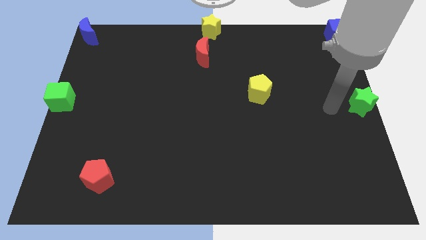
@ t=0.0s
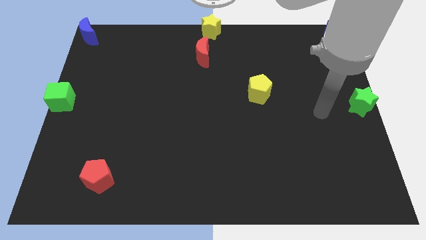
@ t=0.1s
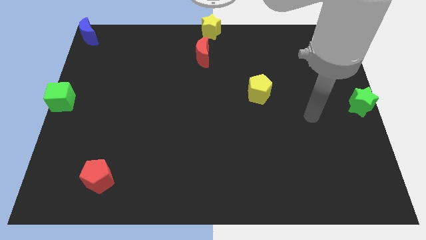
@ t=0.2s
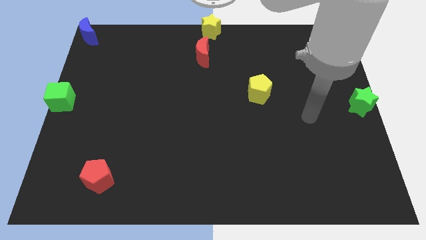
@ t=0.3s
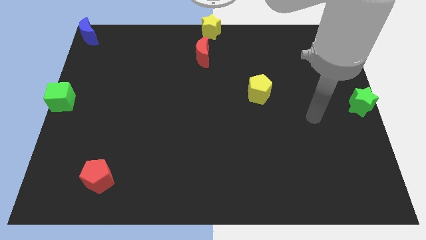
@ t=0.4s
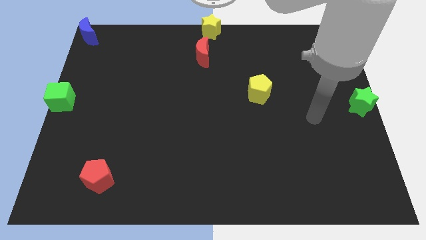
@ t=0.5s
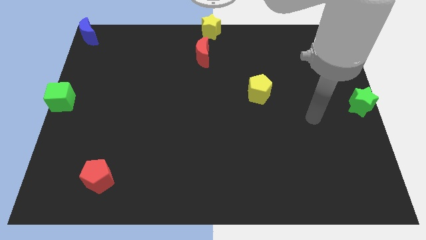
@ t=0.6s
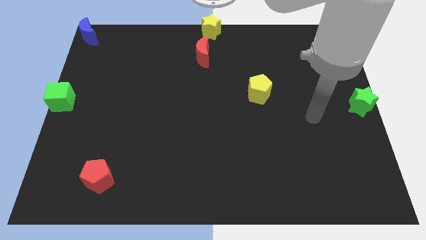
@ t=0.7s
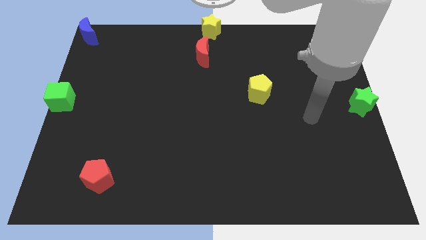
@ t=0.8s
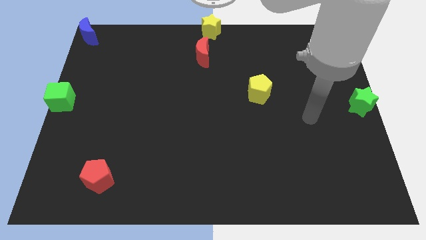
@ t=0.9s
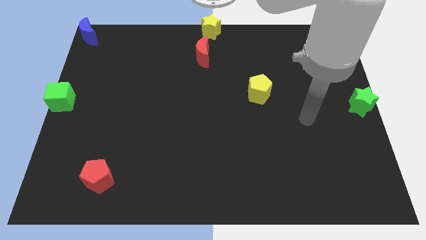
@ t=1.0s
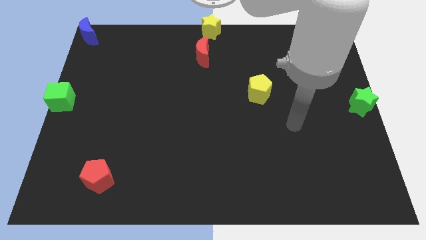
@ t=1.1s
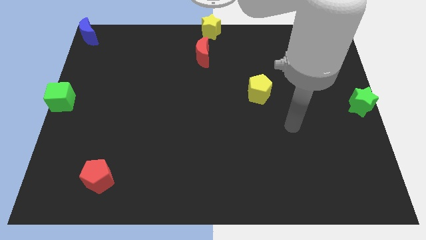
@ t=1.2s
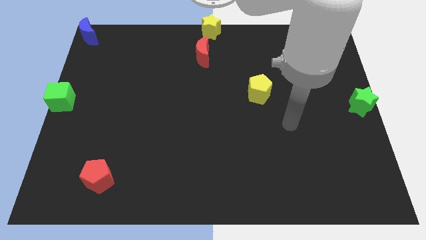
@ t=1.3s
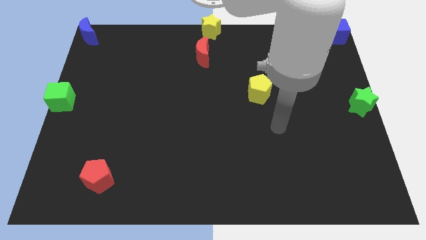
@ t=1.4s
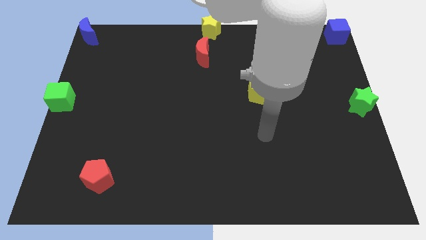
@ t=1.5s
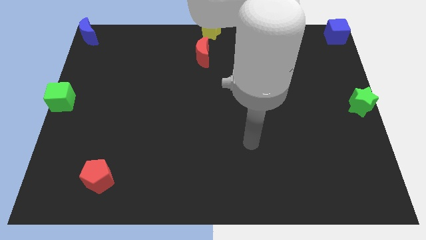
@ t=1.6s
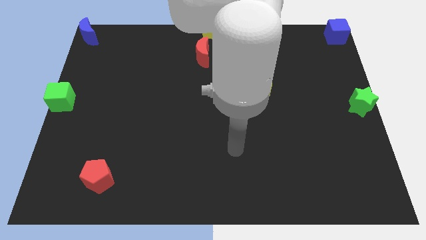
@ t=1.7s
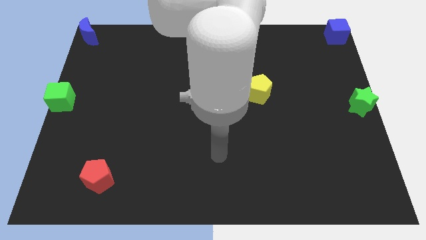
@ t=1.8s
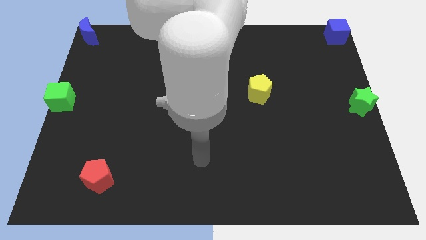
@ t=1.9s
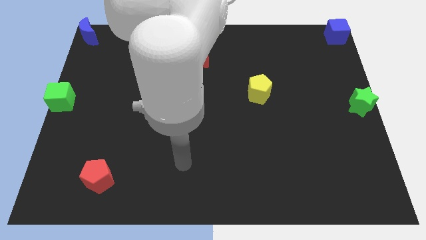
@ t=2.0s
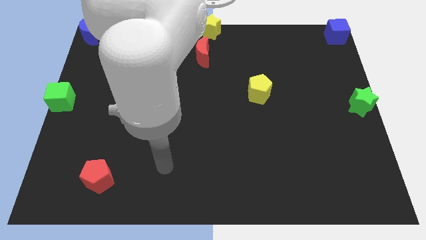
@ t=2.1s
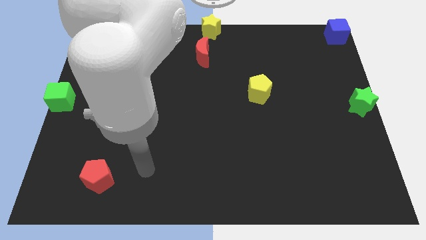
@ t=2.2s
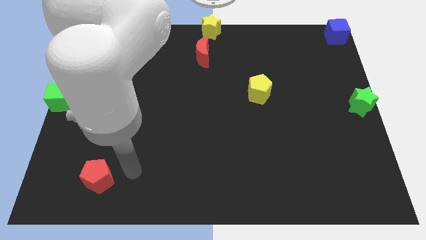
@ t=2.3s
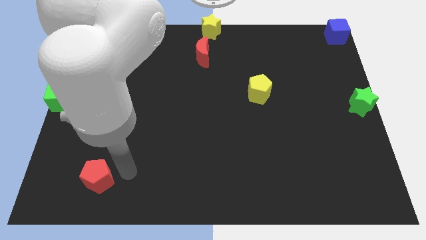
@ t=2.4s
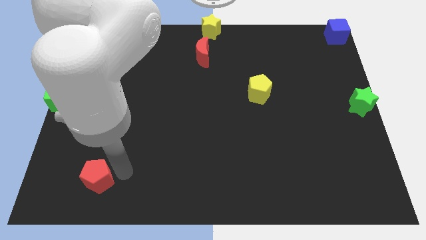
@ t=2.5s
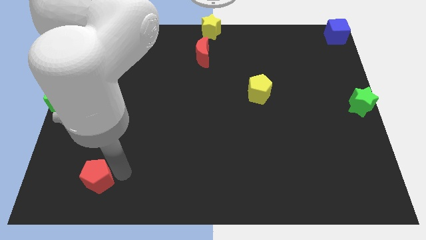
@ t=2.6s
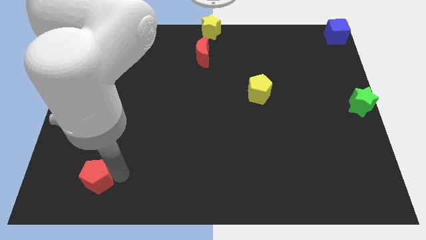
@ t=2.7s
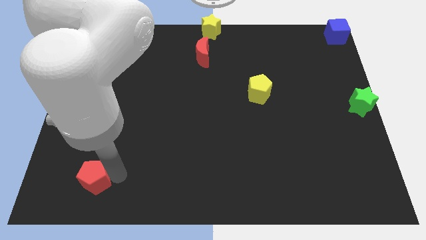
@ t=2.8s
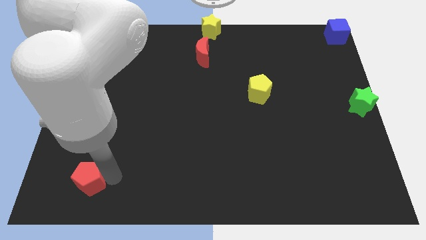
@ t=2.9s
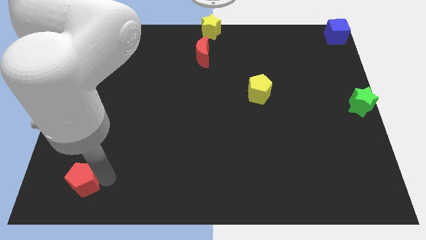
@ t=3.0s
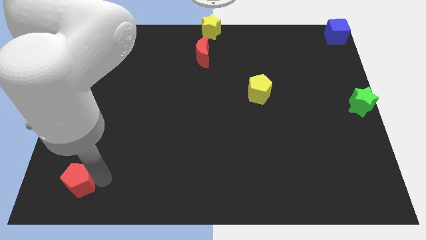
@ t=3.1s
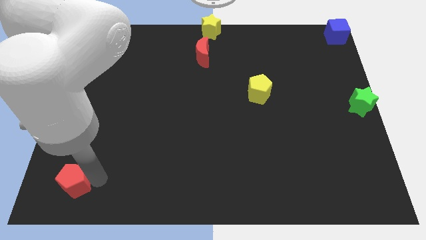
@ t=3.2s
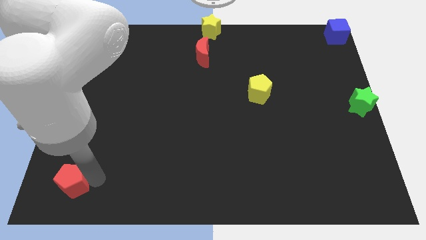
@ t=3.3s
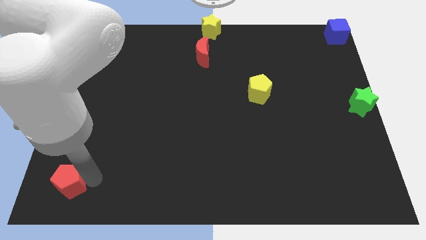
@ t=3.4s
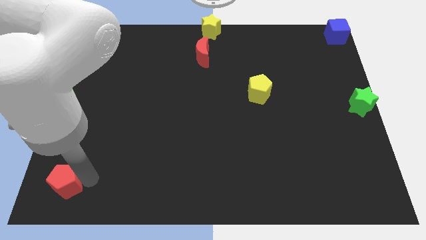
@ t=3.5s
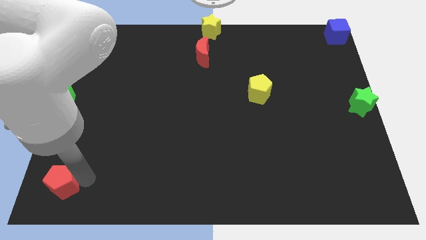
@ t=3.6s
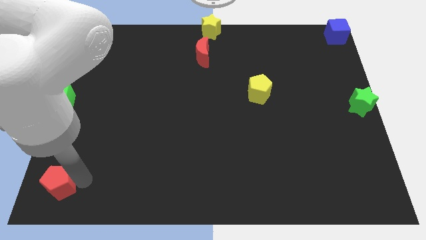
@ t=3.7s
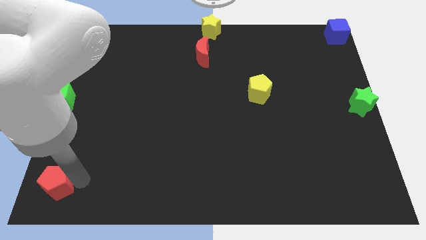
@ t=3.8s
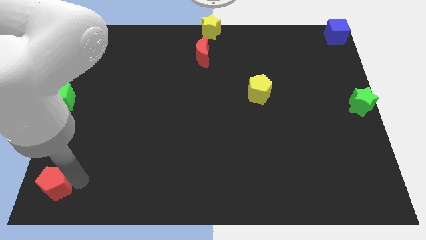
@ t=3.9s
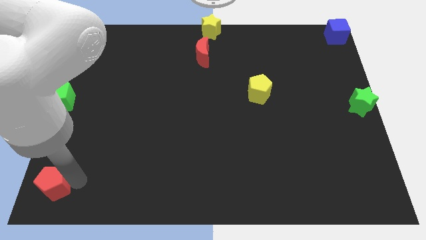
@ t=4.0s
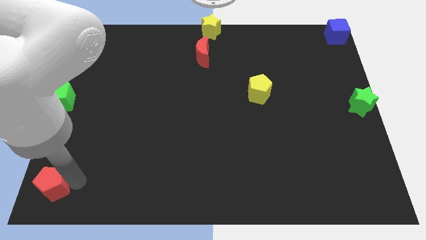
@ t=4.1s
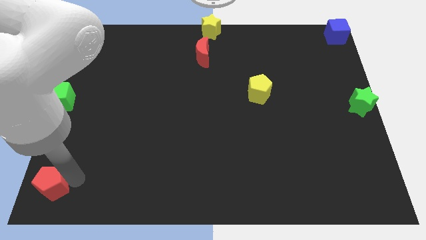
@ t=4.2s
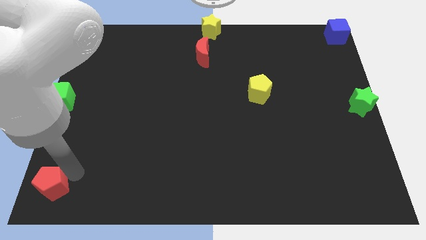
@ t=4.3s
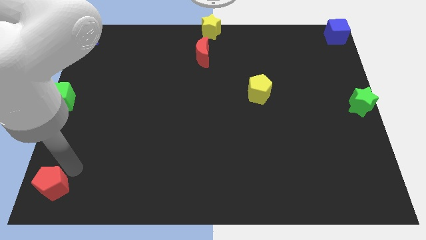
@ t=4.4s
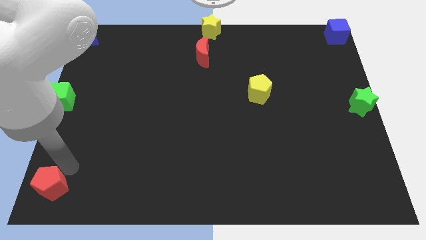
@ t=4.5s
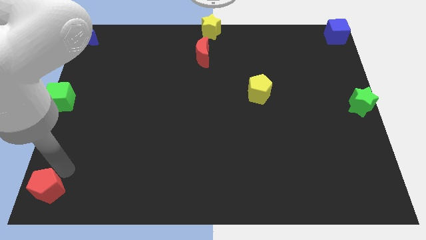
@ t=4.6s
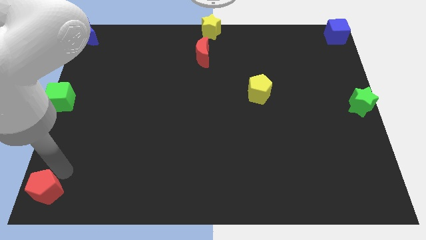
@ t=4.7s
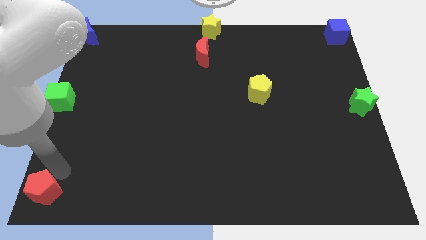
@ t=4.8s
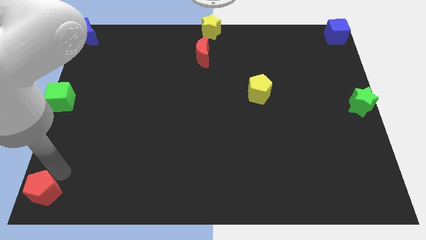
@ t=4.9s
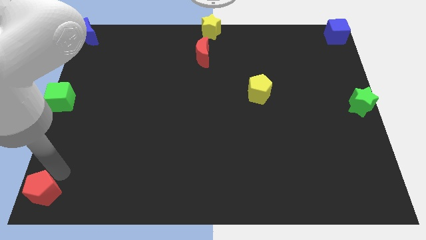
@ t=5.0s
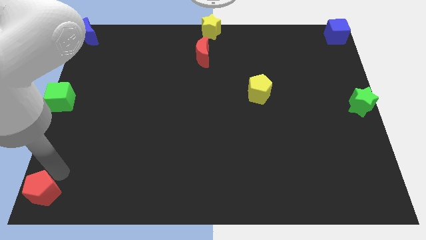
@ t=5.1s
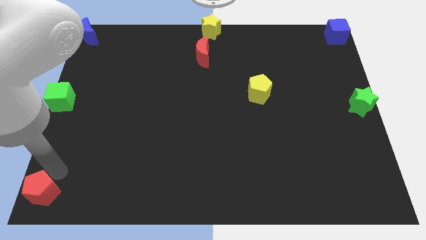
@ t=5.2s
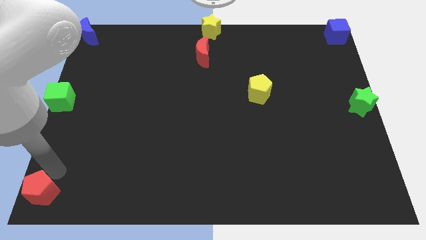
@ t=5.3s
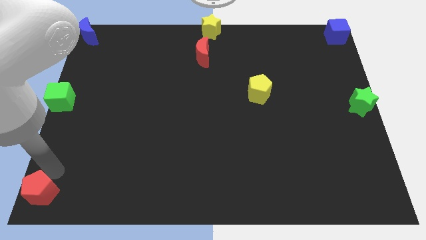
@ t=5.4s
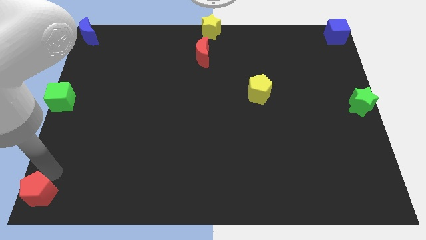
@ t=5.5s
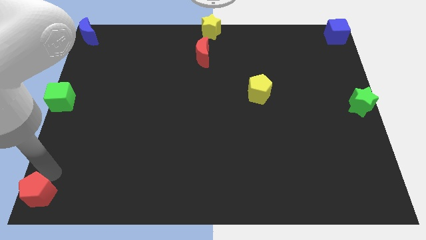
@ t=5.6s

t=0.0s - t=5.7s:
put the red pentagon at the bottom left side corner of the board

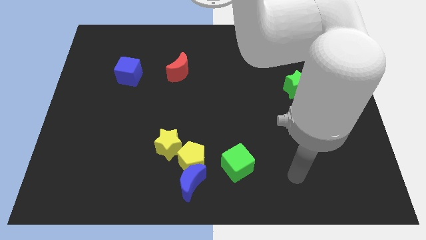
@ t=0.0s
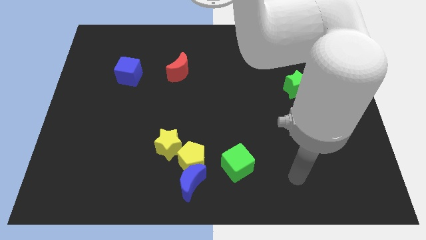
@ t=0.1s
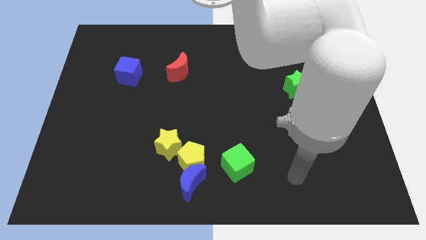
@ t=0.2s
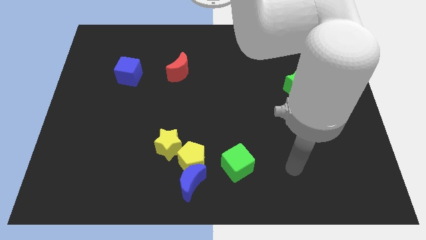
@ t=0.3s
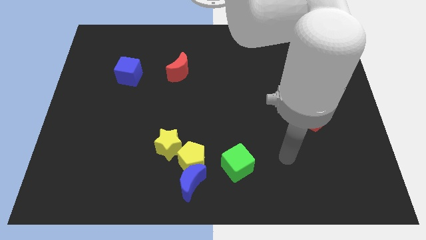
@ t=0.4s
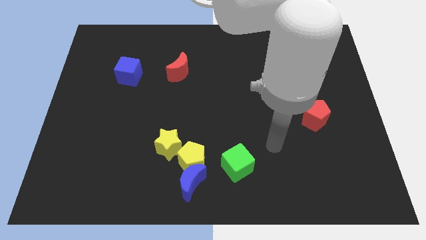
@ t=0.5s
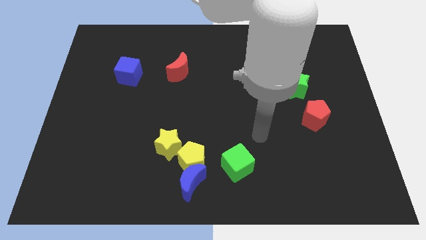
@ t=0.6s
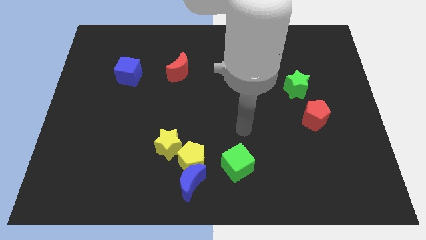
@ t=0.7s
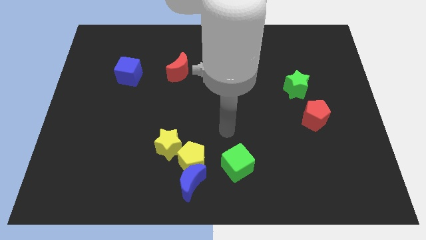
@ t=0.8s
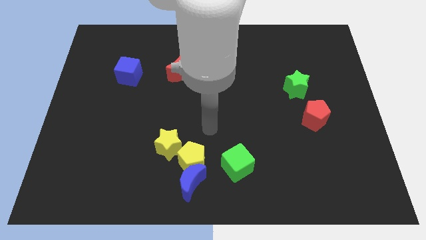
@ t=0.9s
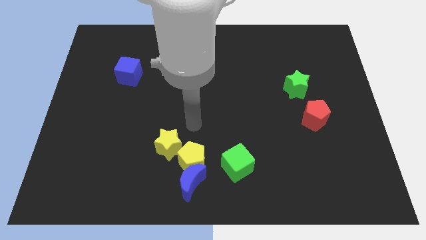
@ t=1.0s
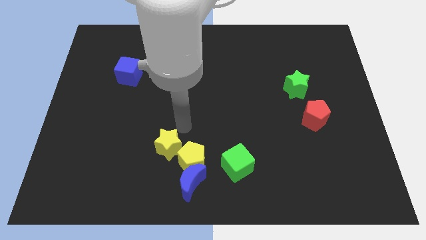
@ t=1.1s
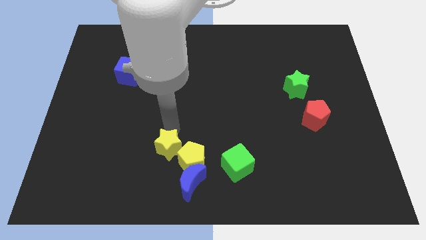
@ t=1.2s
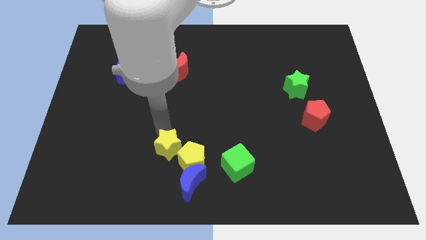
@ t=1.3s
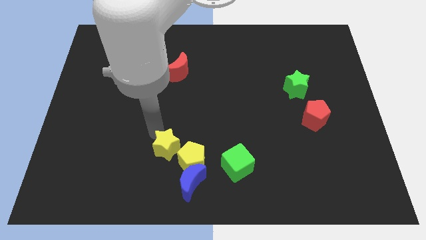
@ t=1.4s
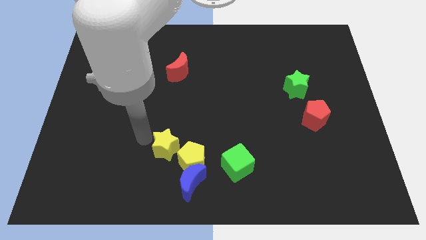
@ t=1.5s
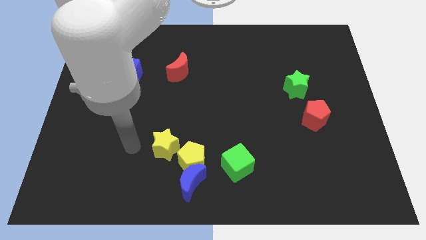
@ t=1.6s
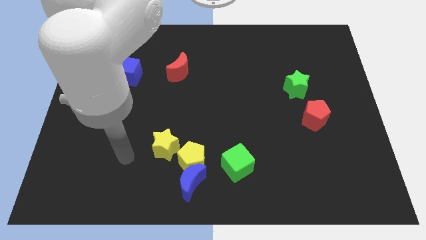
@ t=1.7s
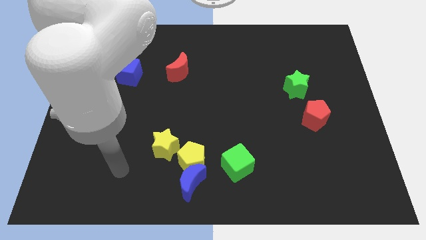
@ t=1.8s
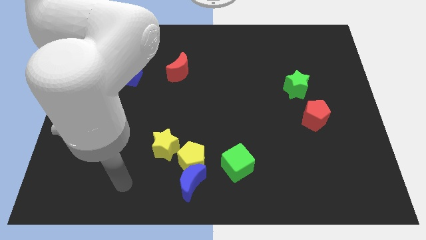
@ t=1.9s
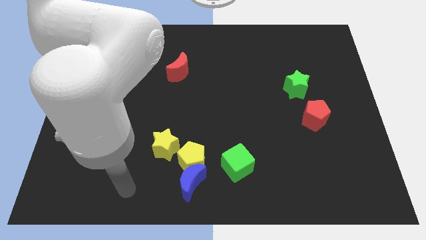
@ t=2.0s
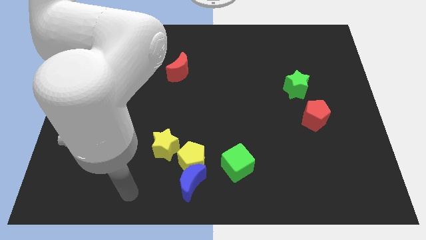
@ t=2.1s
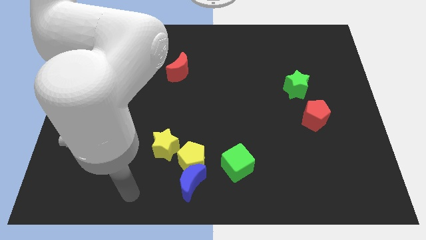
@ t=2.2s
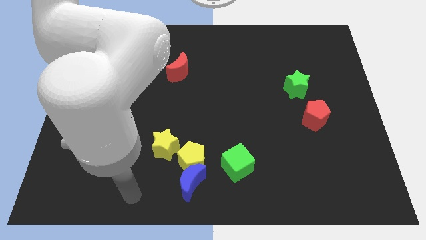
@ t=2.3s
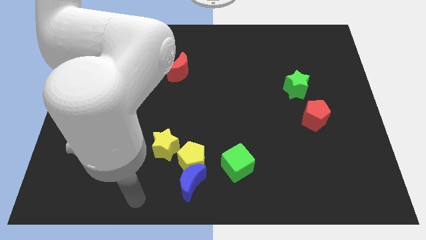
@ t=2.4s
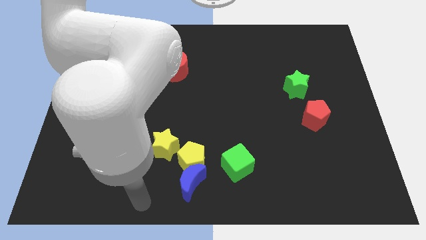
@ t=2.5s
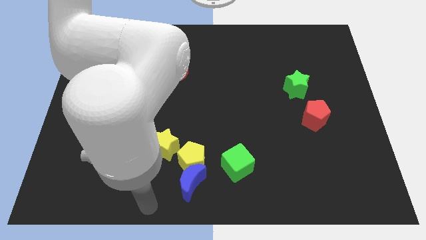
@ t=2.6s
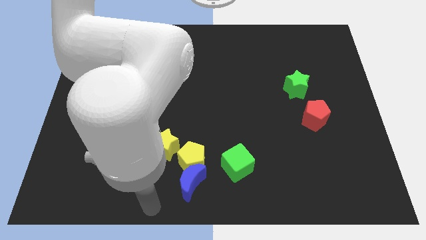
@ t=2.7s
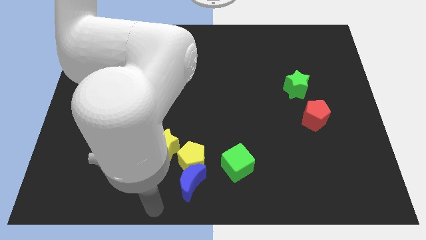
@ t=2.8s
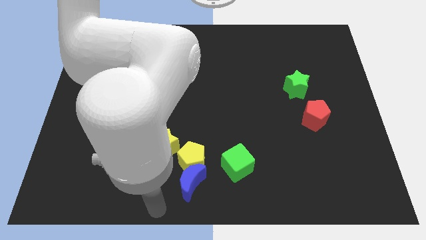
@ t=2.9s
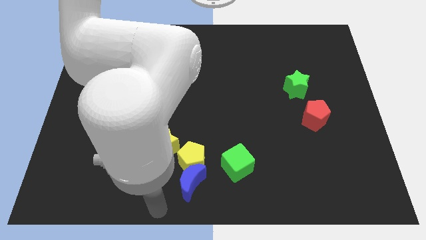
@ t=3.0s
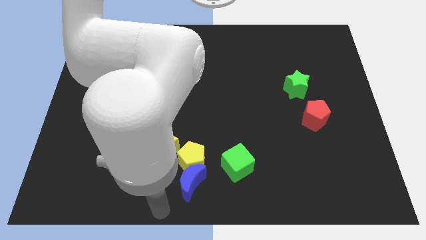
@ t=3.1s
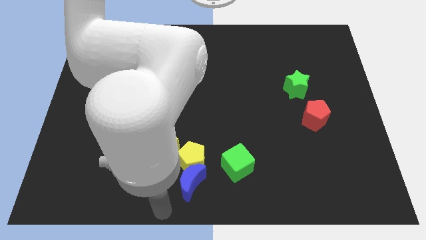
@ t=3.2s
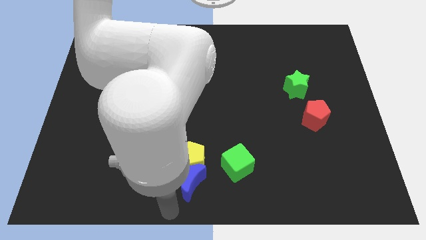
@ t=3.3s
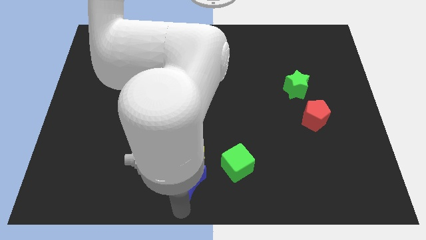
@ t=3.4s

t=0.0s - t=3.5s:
place your hand vertically below the blue crescent
